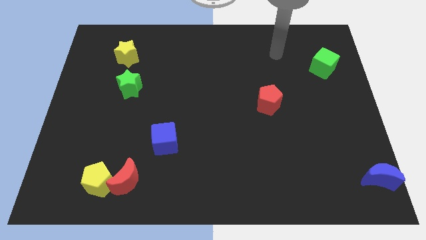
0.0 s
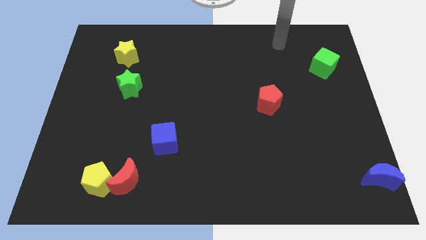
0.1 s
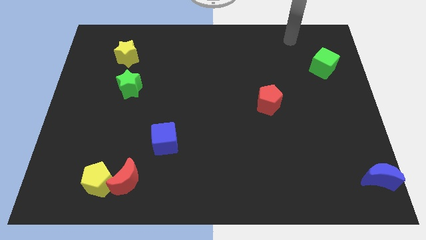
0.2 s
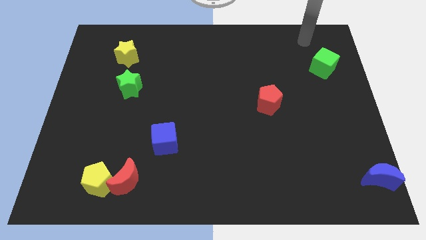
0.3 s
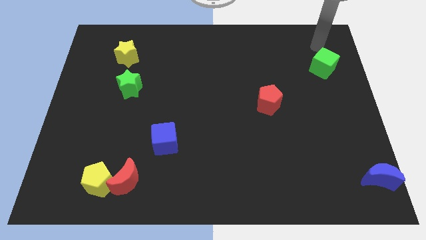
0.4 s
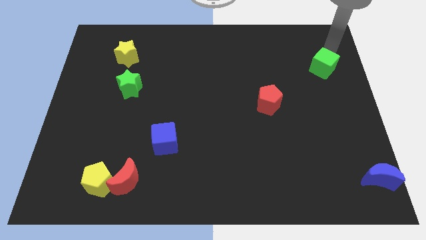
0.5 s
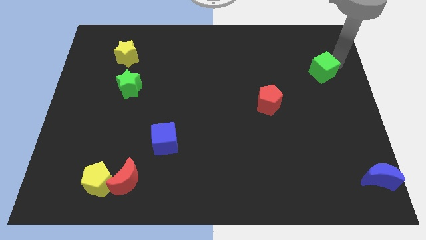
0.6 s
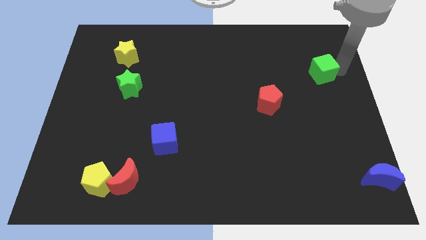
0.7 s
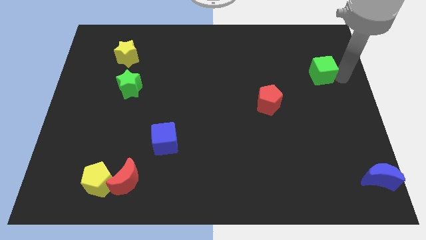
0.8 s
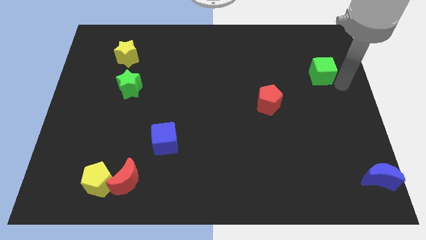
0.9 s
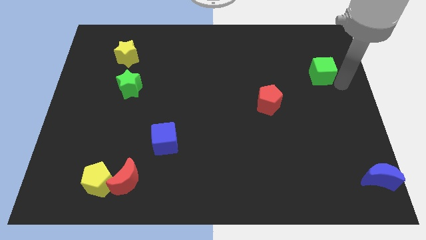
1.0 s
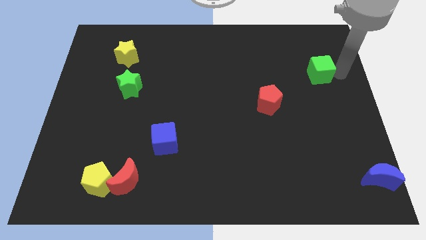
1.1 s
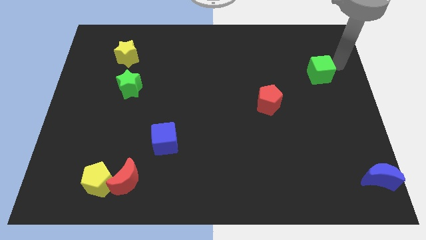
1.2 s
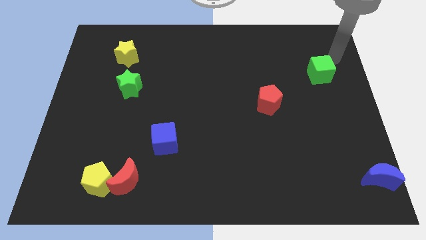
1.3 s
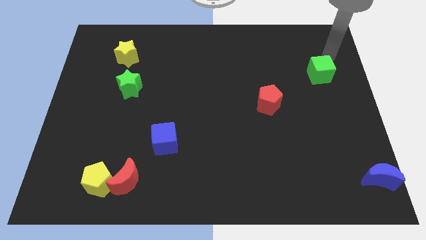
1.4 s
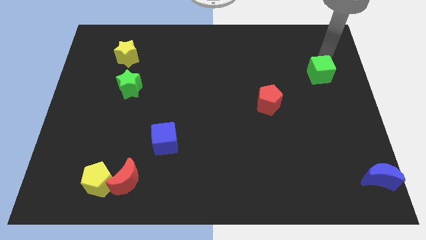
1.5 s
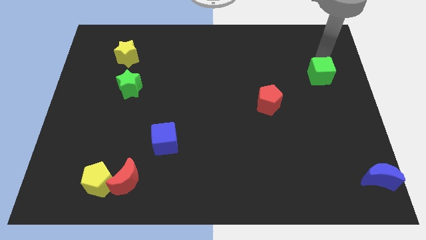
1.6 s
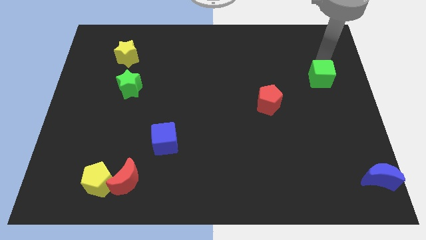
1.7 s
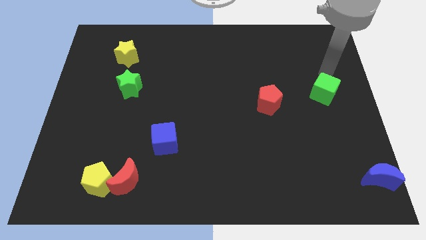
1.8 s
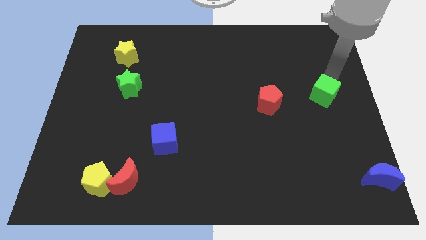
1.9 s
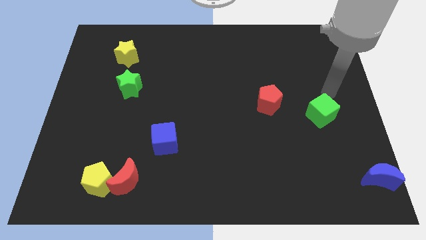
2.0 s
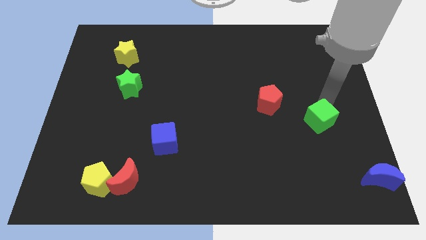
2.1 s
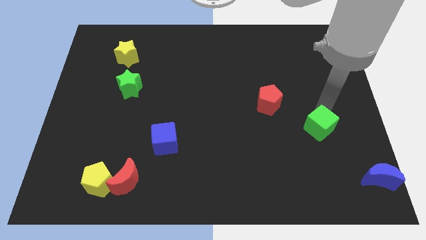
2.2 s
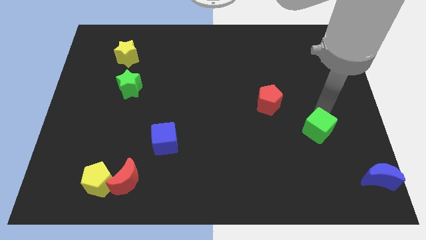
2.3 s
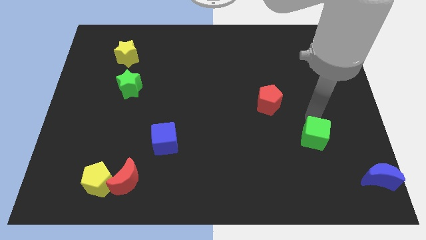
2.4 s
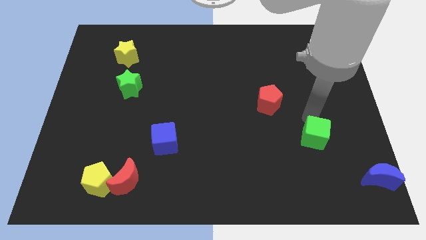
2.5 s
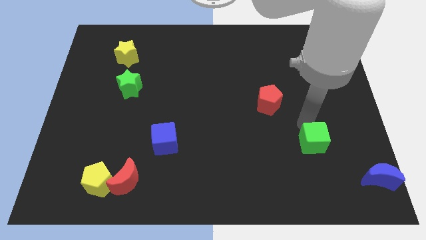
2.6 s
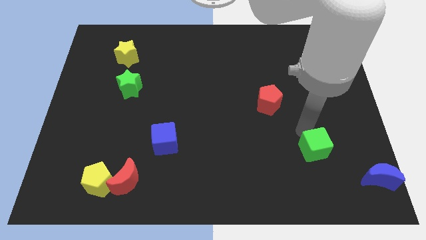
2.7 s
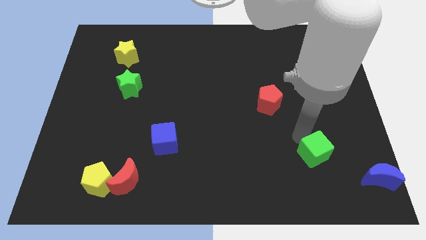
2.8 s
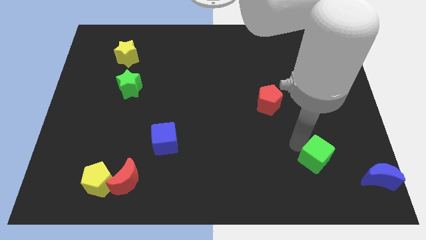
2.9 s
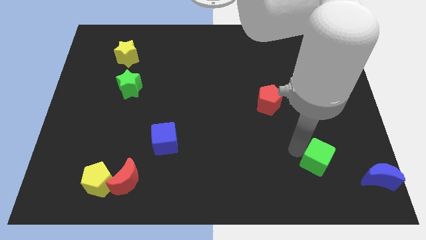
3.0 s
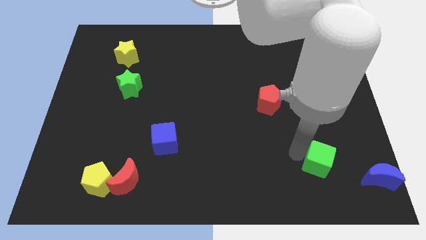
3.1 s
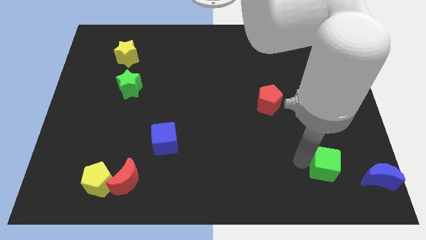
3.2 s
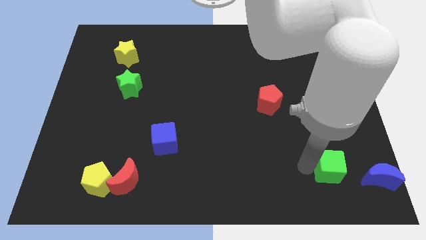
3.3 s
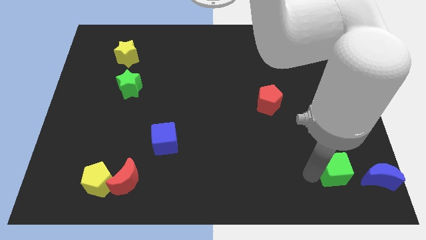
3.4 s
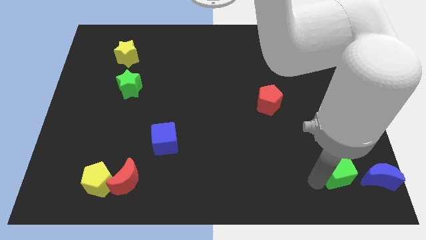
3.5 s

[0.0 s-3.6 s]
put the green cube to the left side of the blue moon

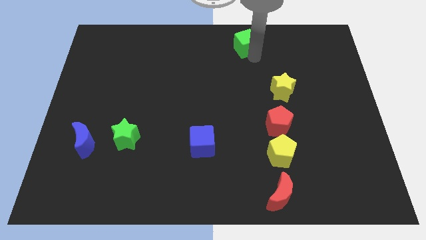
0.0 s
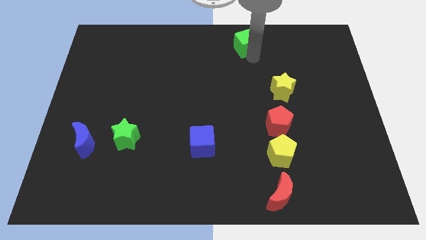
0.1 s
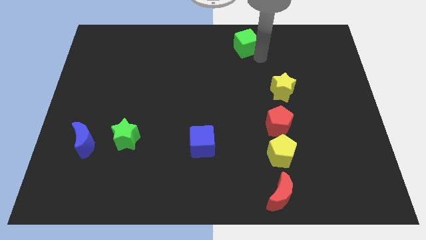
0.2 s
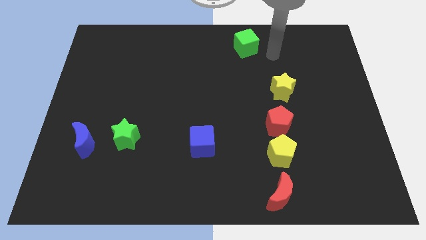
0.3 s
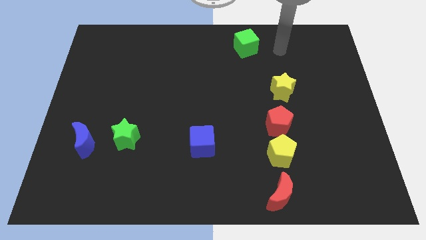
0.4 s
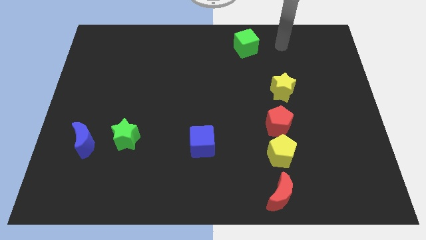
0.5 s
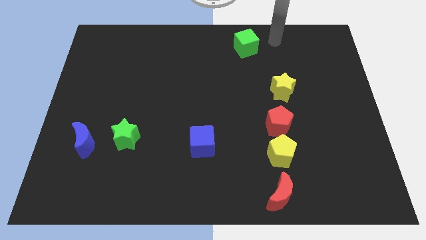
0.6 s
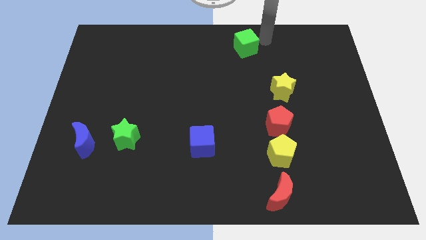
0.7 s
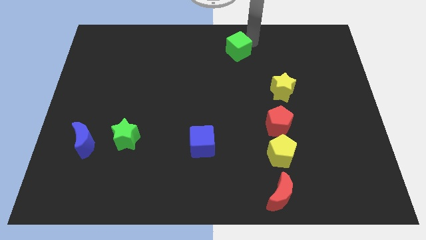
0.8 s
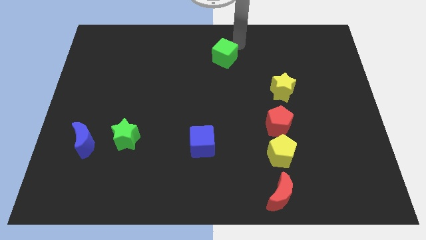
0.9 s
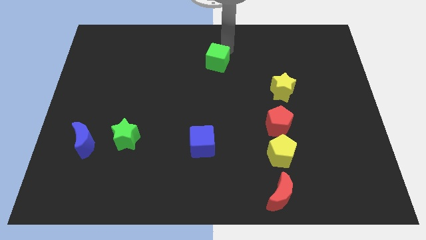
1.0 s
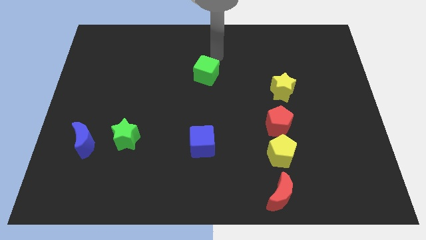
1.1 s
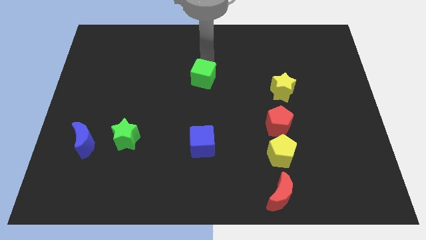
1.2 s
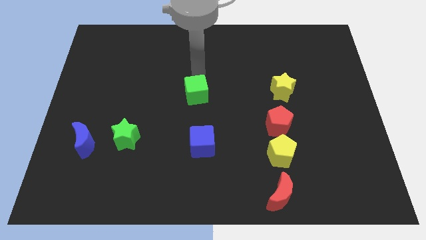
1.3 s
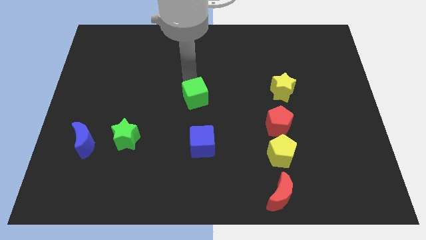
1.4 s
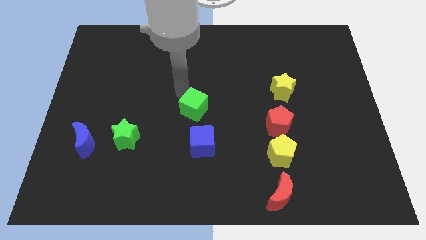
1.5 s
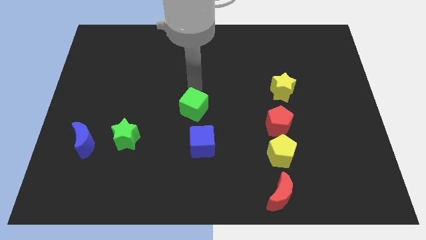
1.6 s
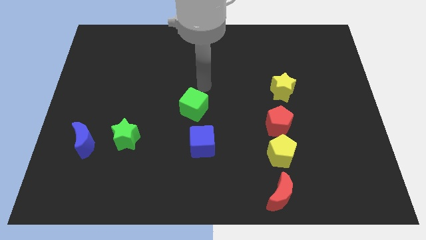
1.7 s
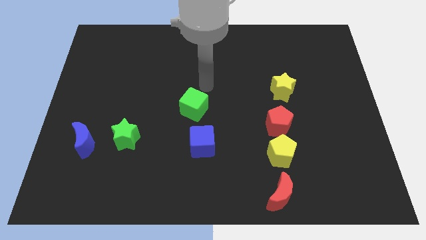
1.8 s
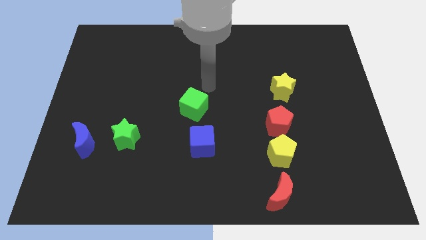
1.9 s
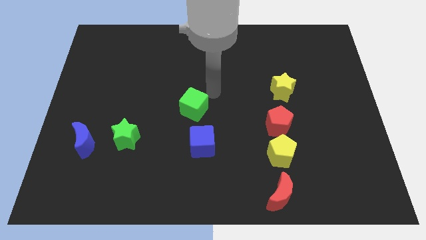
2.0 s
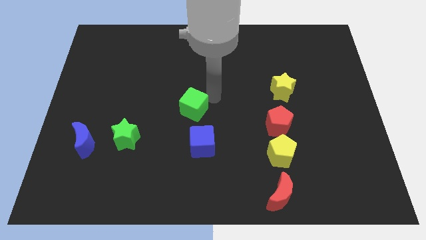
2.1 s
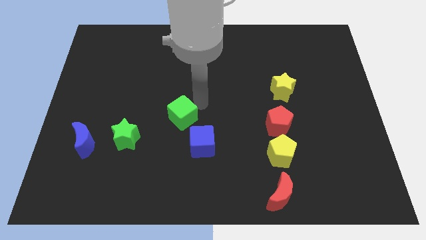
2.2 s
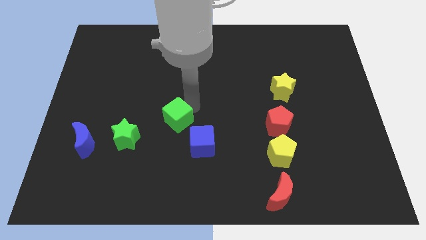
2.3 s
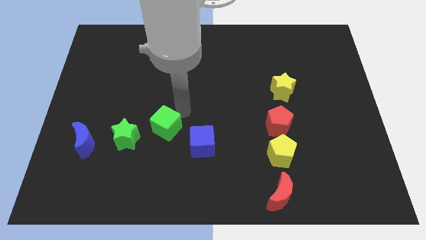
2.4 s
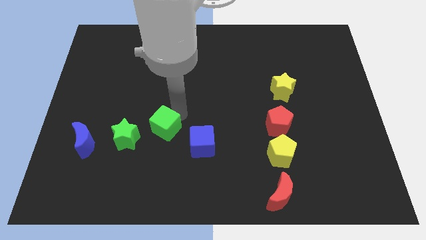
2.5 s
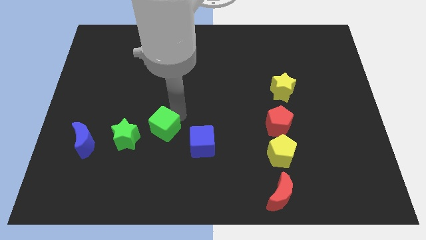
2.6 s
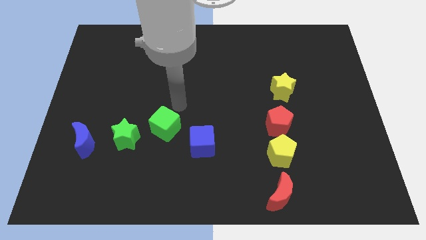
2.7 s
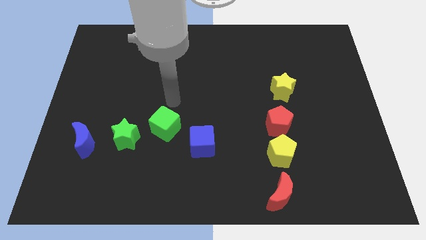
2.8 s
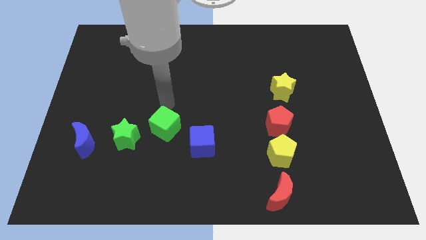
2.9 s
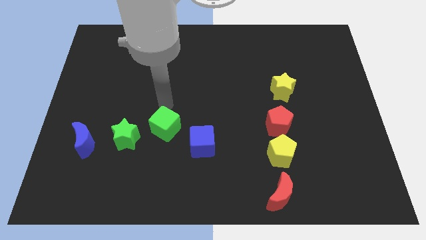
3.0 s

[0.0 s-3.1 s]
move the green cube towards green star

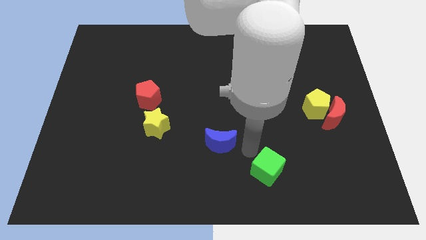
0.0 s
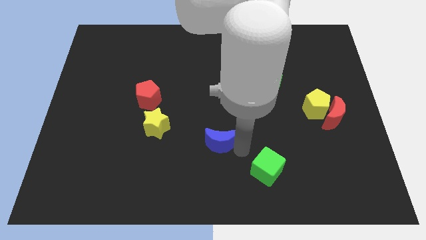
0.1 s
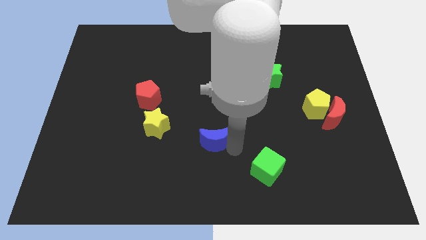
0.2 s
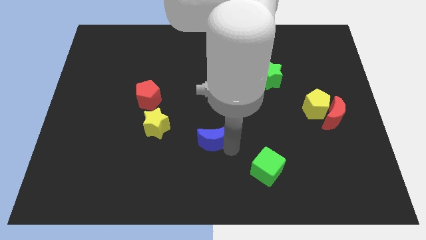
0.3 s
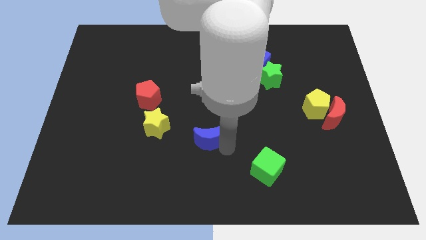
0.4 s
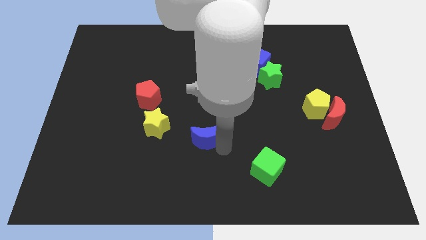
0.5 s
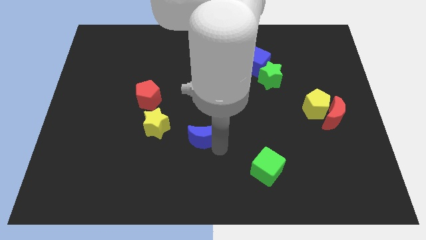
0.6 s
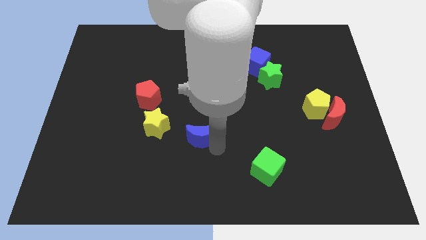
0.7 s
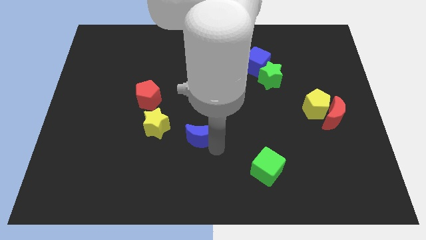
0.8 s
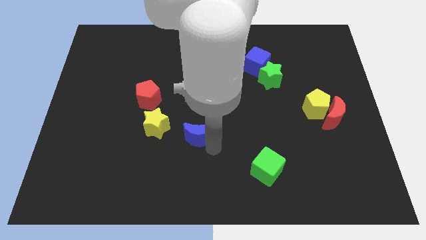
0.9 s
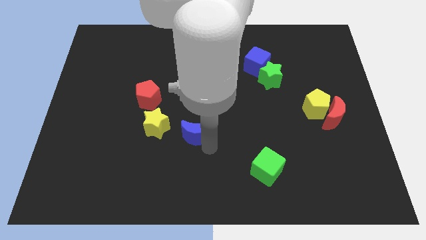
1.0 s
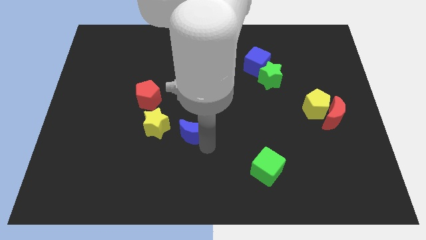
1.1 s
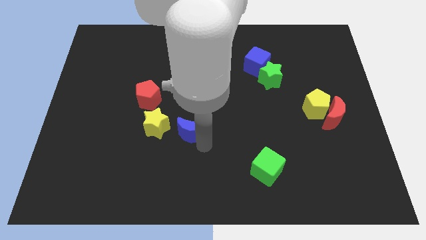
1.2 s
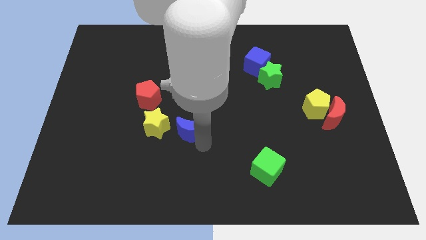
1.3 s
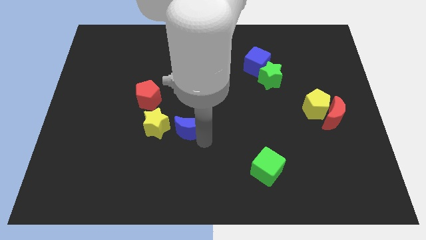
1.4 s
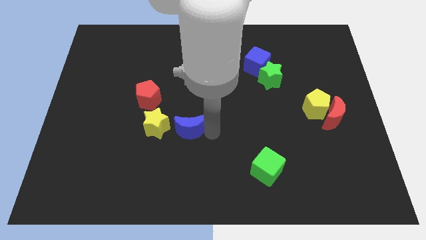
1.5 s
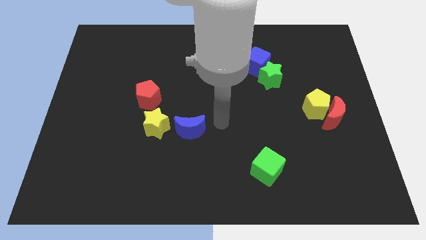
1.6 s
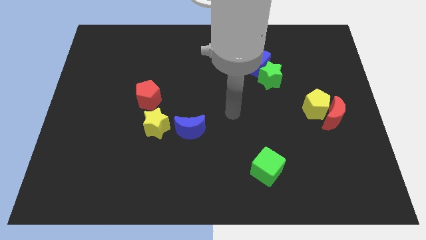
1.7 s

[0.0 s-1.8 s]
move the blue crescent to the right side of the yellow star

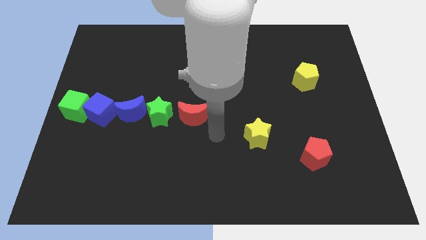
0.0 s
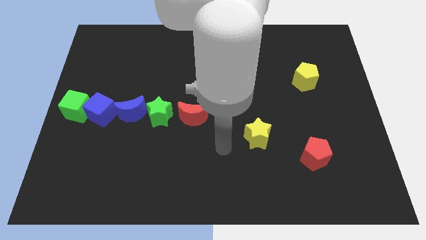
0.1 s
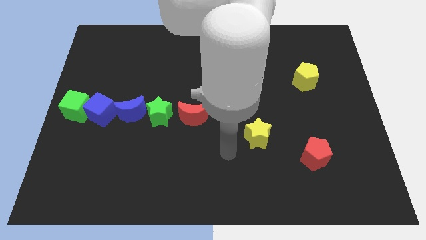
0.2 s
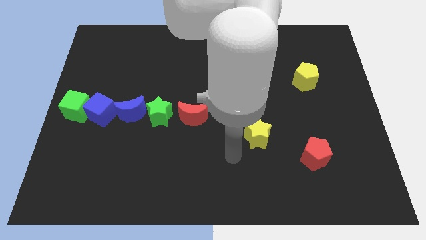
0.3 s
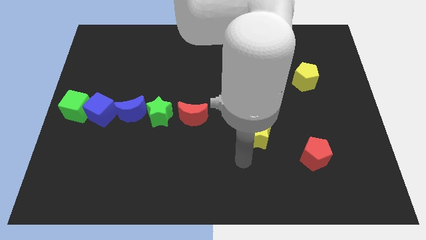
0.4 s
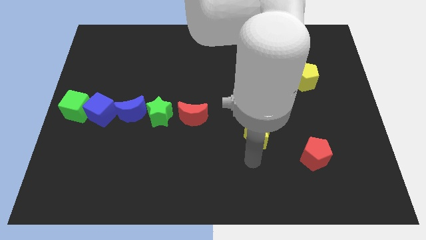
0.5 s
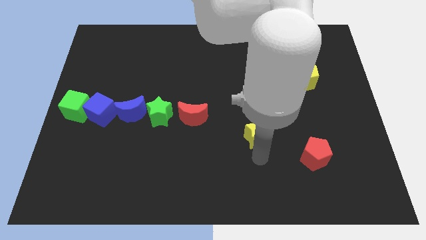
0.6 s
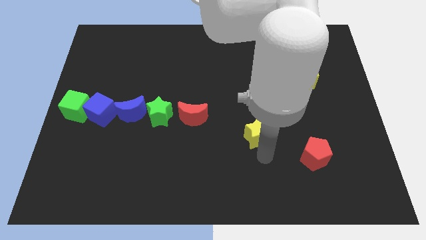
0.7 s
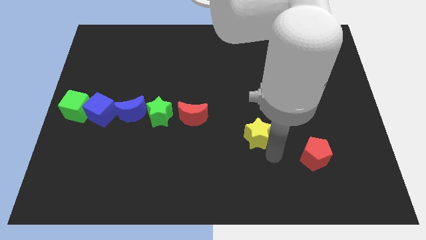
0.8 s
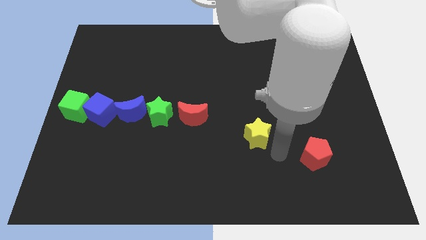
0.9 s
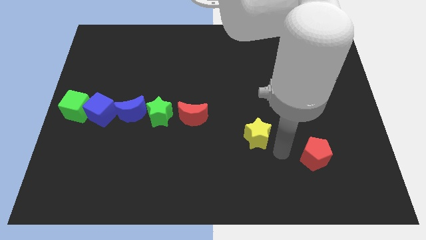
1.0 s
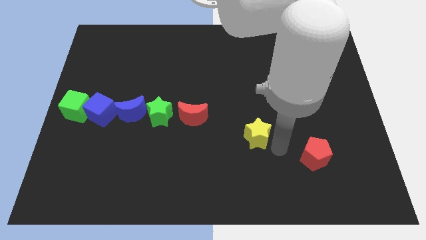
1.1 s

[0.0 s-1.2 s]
move your arm towards the yellow star
